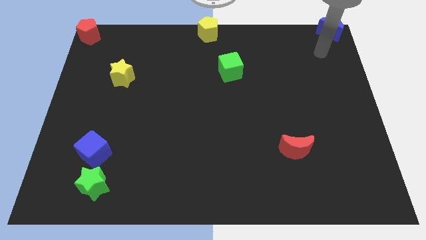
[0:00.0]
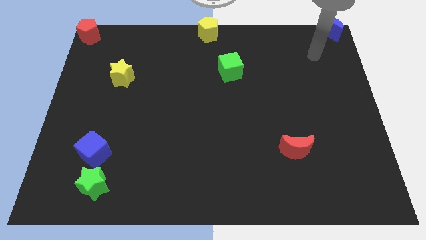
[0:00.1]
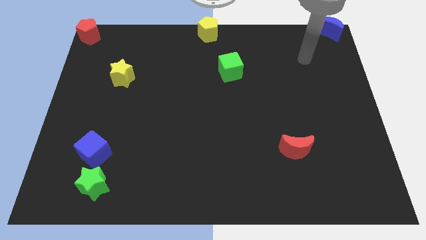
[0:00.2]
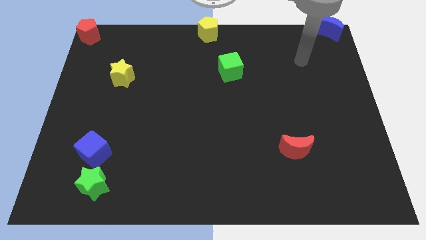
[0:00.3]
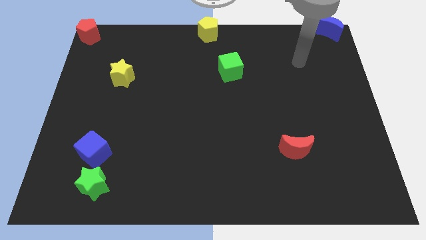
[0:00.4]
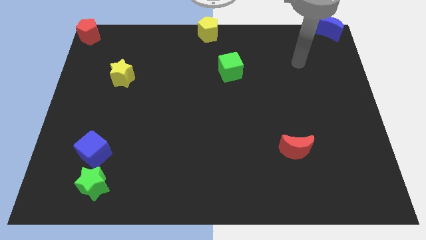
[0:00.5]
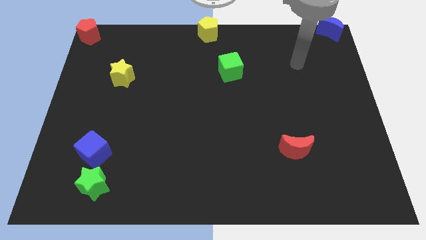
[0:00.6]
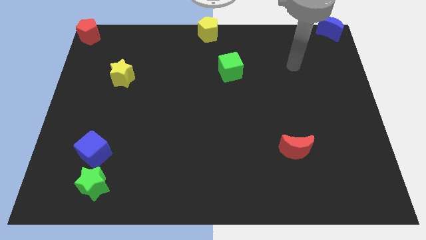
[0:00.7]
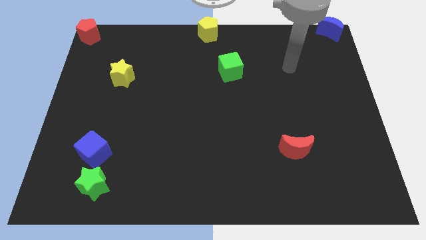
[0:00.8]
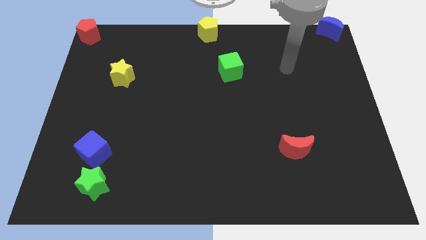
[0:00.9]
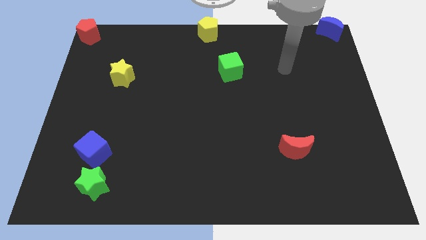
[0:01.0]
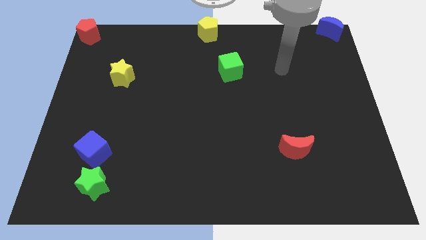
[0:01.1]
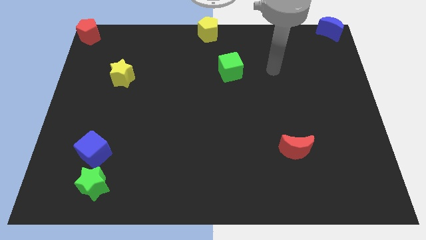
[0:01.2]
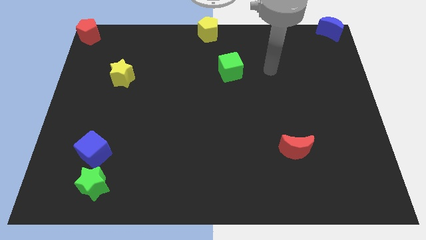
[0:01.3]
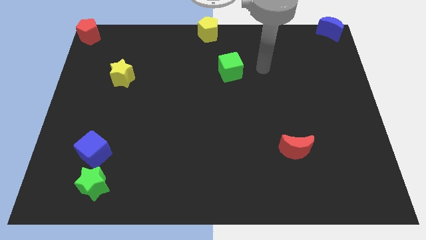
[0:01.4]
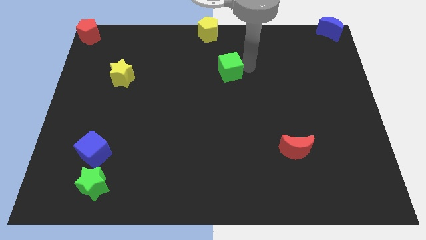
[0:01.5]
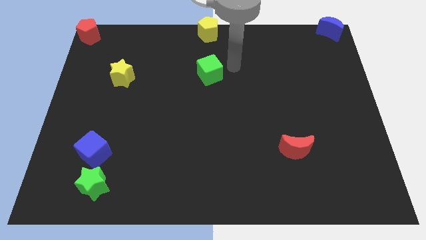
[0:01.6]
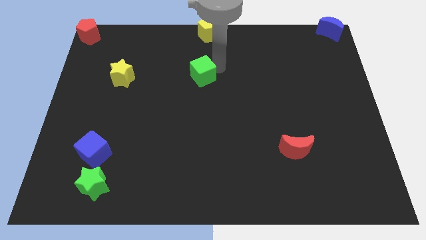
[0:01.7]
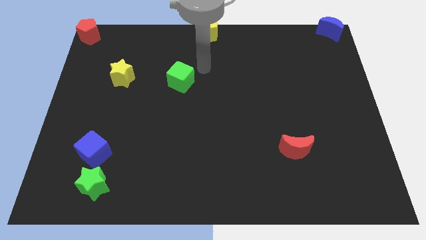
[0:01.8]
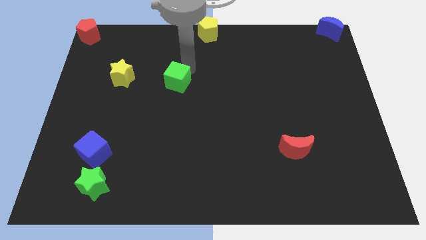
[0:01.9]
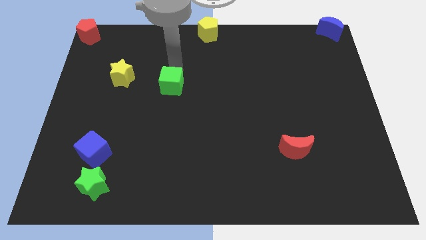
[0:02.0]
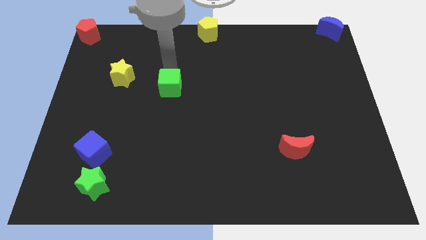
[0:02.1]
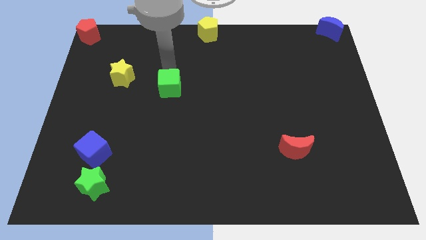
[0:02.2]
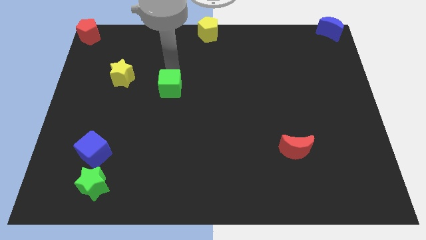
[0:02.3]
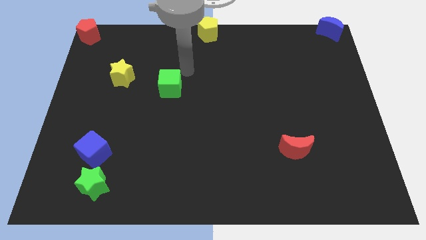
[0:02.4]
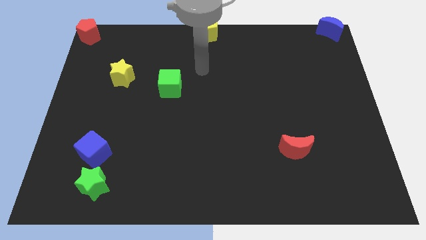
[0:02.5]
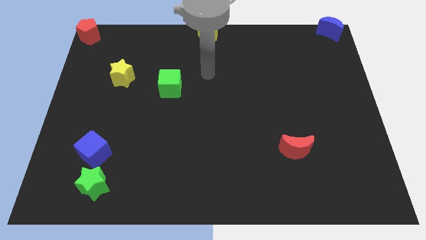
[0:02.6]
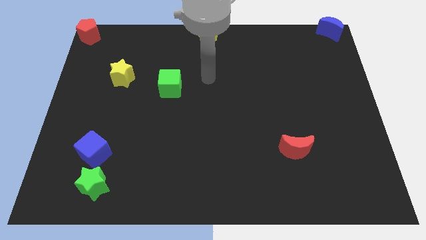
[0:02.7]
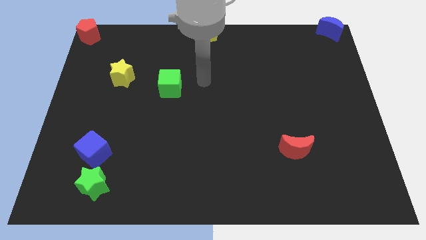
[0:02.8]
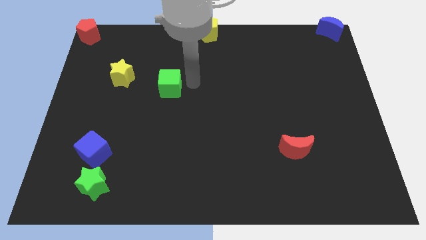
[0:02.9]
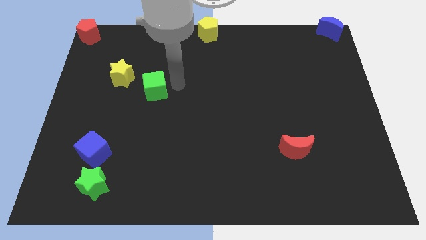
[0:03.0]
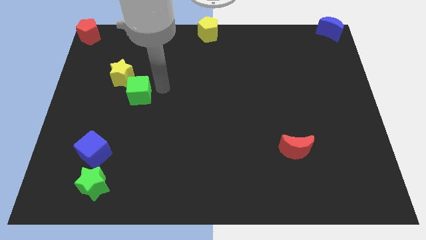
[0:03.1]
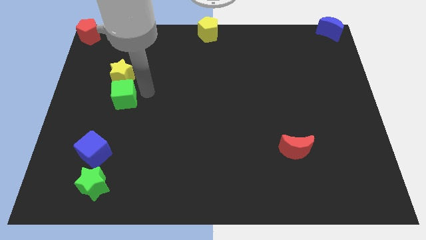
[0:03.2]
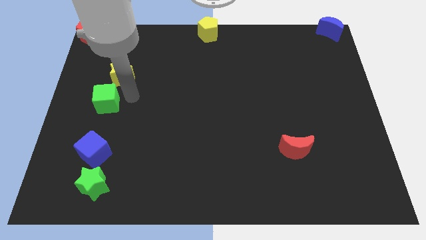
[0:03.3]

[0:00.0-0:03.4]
put the green cube to the bottom right side of the yellow star

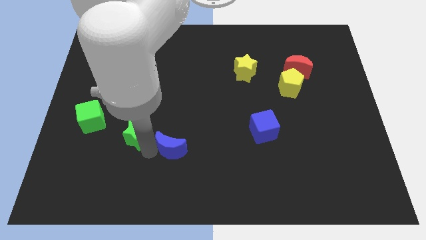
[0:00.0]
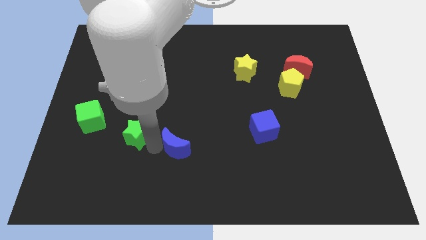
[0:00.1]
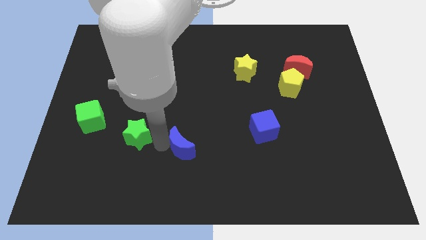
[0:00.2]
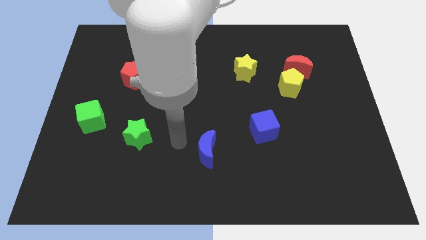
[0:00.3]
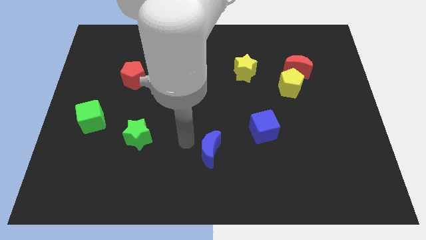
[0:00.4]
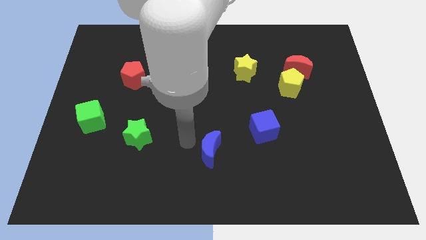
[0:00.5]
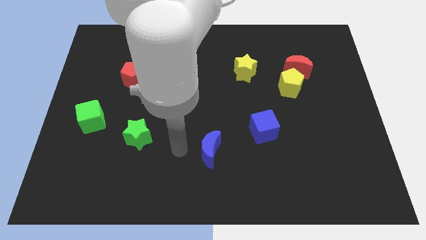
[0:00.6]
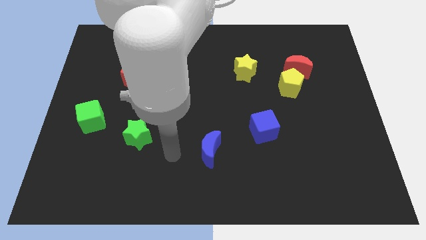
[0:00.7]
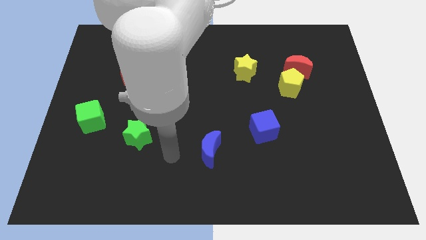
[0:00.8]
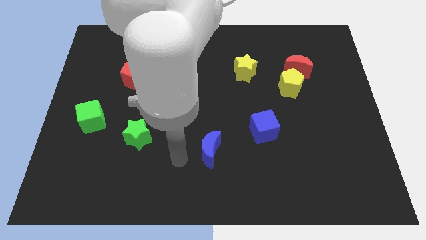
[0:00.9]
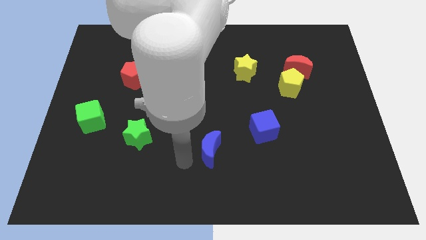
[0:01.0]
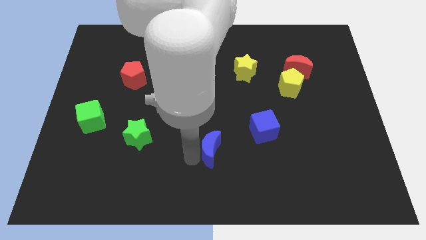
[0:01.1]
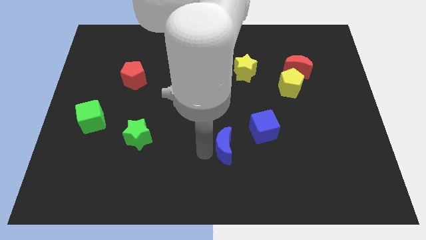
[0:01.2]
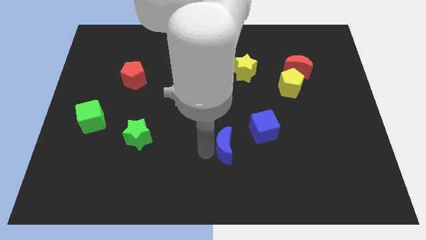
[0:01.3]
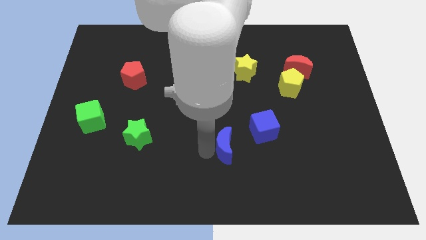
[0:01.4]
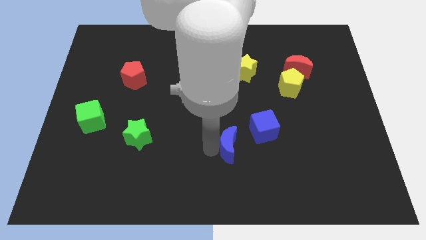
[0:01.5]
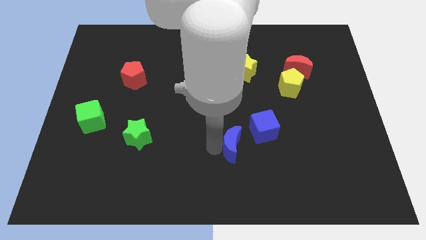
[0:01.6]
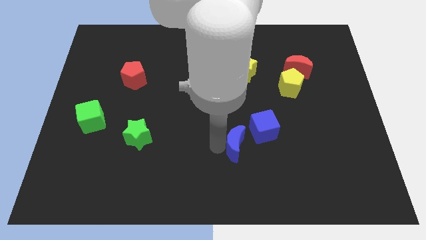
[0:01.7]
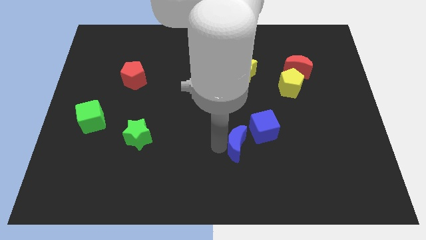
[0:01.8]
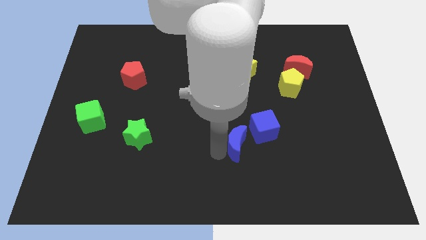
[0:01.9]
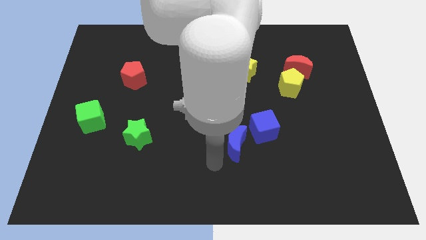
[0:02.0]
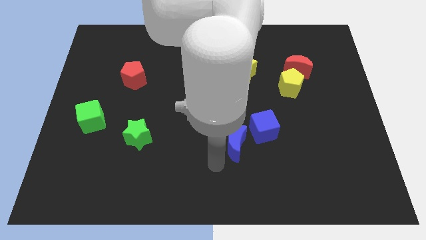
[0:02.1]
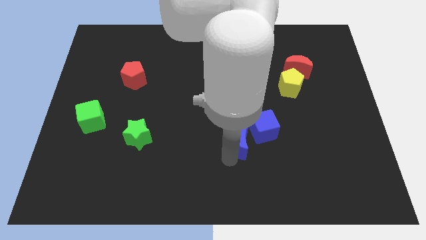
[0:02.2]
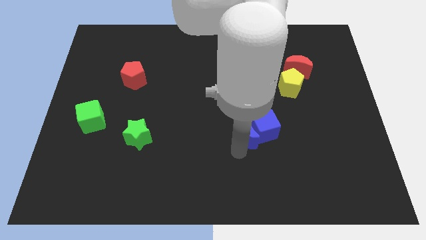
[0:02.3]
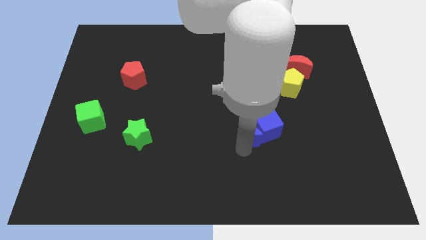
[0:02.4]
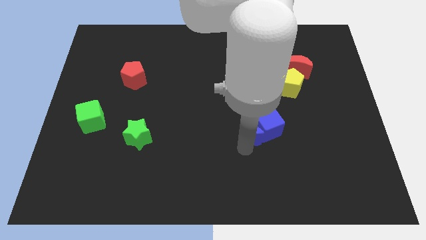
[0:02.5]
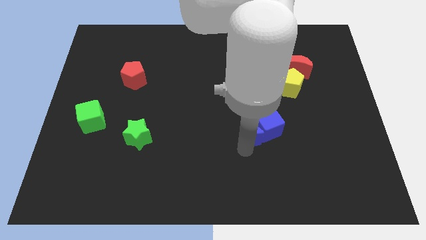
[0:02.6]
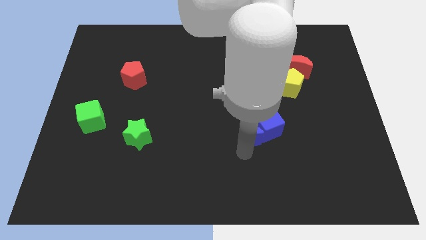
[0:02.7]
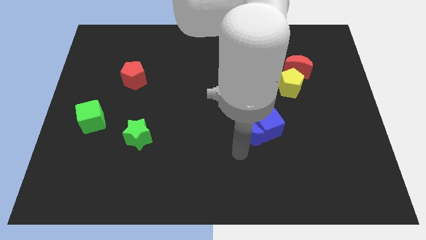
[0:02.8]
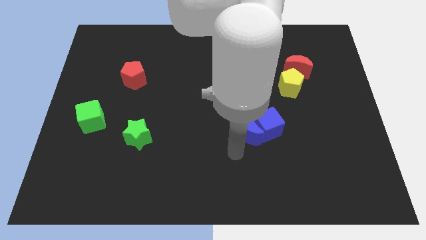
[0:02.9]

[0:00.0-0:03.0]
push the blue crescent into the blue cube

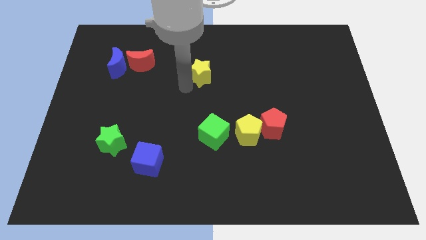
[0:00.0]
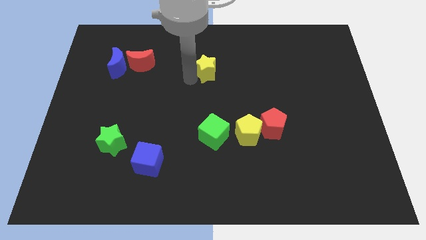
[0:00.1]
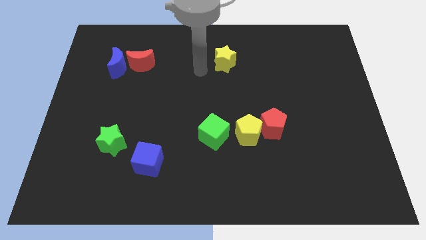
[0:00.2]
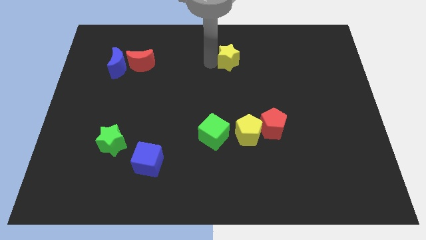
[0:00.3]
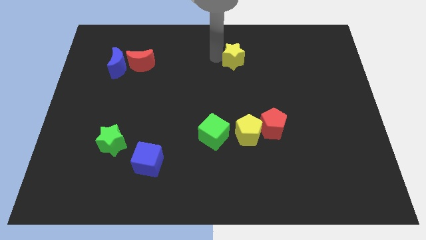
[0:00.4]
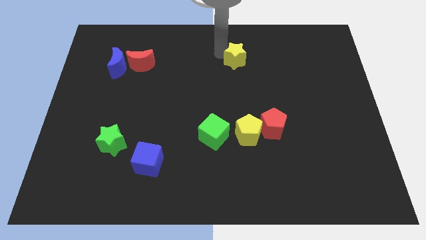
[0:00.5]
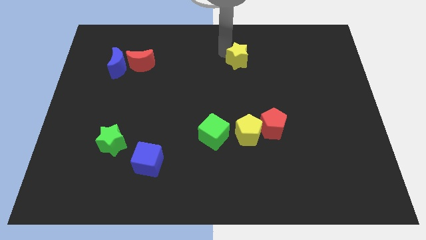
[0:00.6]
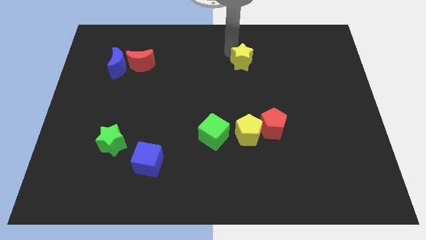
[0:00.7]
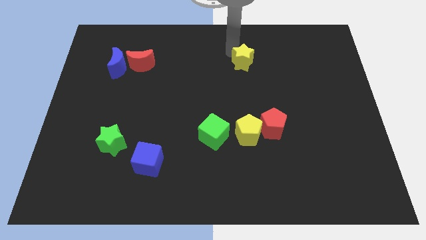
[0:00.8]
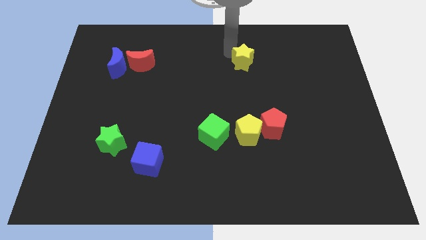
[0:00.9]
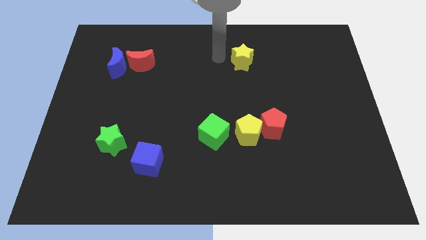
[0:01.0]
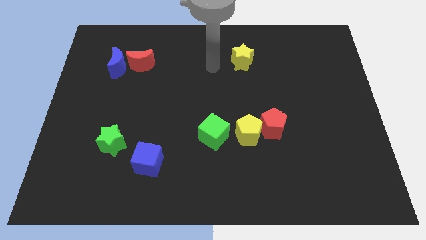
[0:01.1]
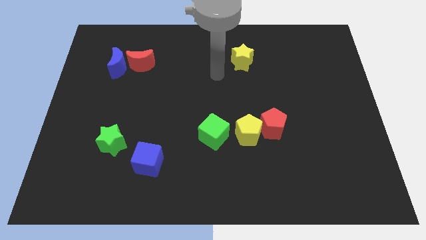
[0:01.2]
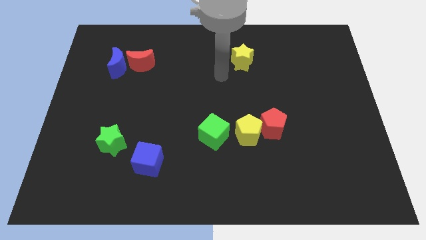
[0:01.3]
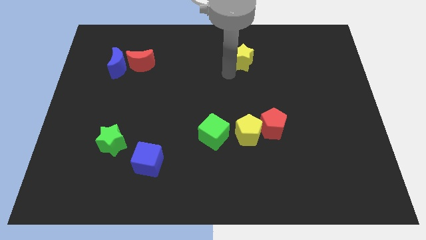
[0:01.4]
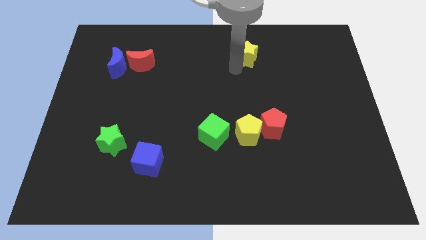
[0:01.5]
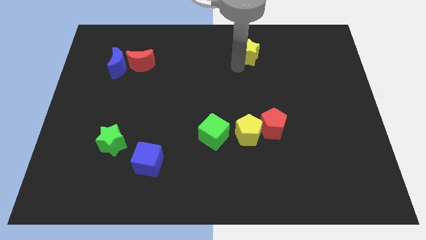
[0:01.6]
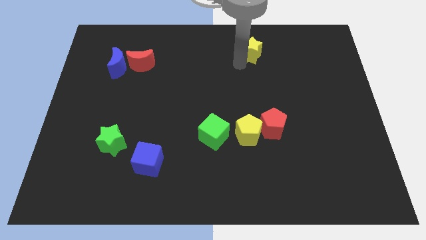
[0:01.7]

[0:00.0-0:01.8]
move the yellow star to the top side of the yellow pentagon

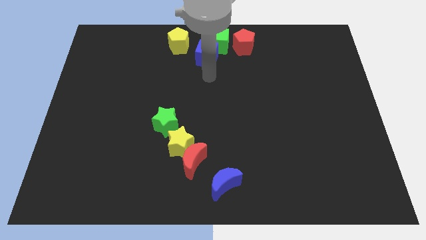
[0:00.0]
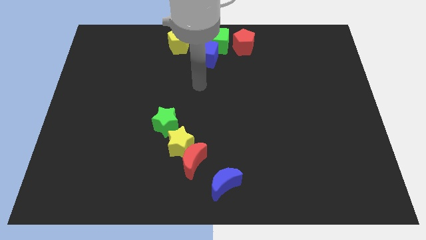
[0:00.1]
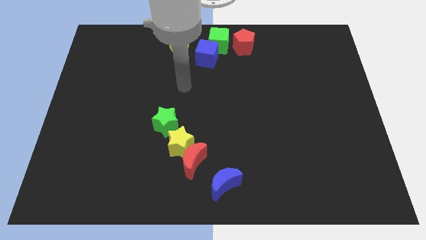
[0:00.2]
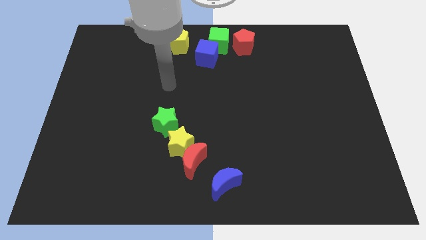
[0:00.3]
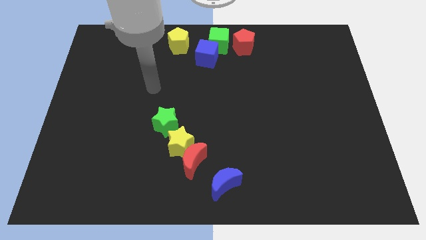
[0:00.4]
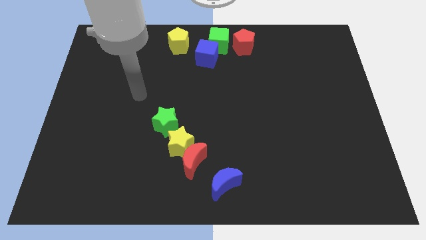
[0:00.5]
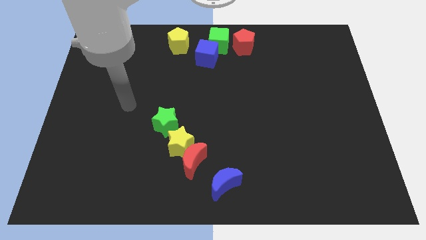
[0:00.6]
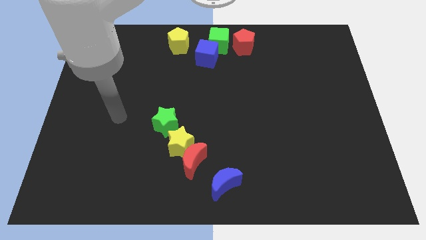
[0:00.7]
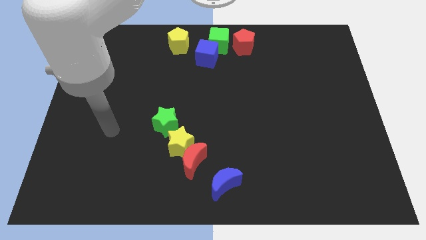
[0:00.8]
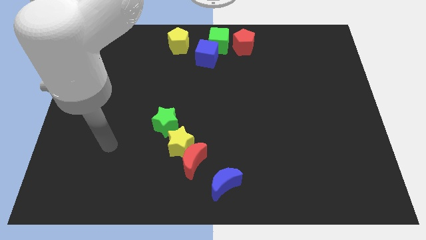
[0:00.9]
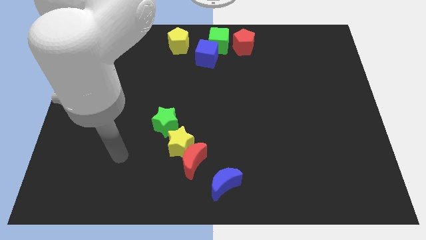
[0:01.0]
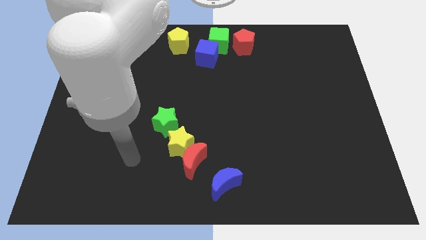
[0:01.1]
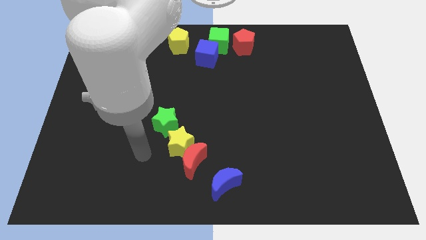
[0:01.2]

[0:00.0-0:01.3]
point the arm to the left of the yellow star
